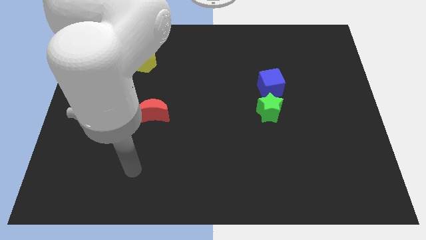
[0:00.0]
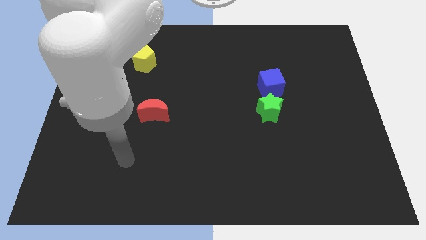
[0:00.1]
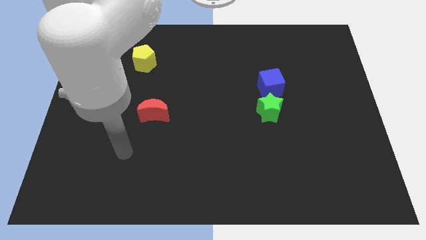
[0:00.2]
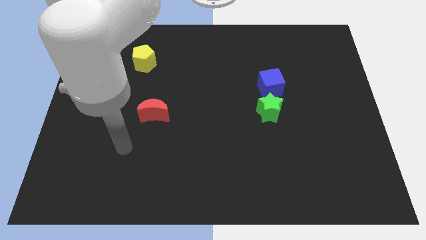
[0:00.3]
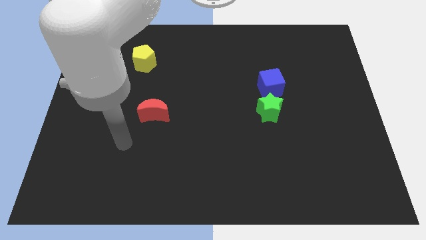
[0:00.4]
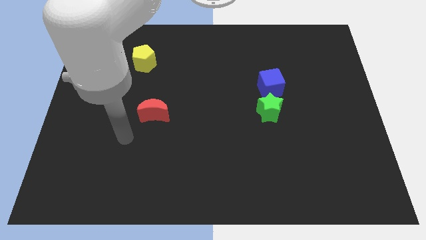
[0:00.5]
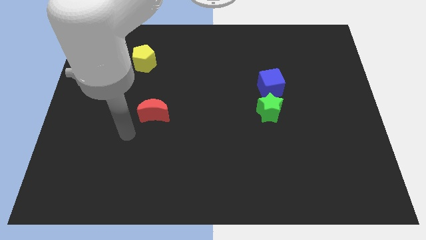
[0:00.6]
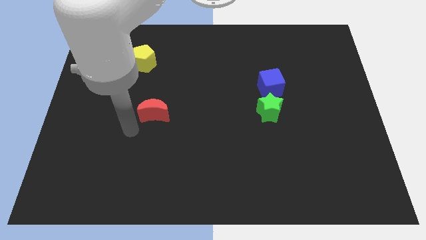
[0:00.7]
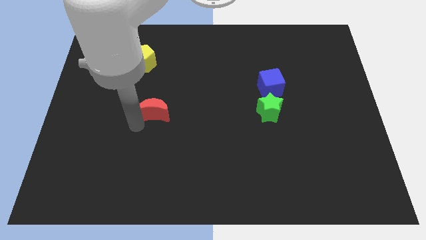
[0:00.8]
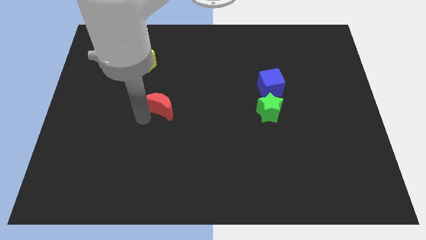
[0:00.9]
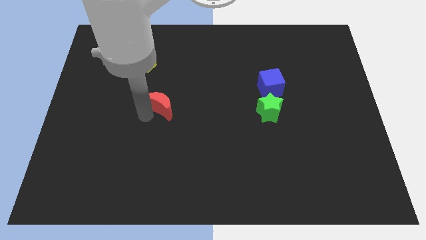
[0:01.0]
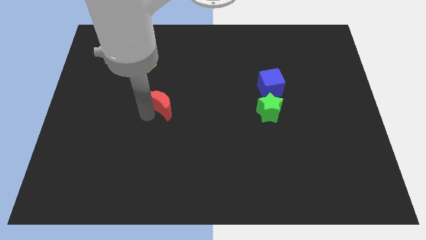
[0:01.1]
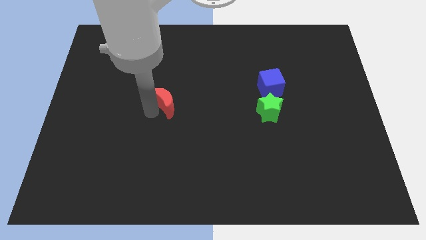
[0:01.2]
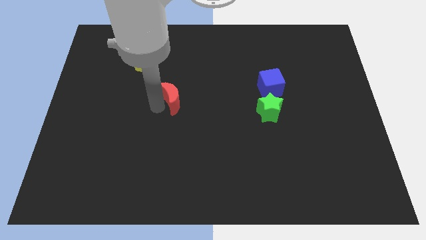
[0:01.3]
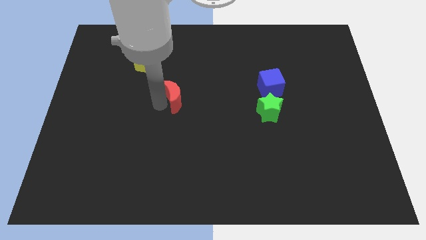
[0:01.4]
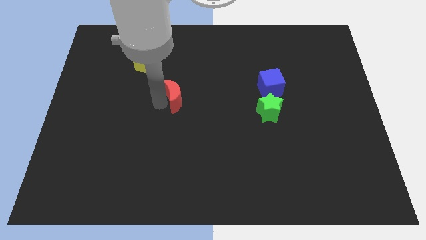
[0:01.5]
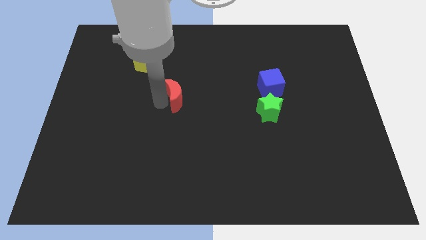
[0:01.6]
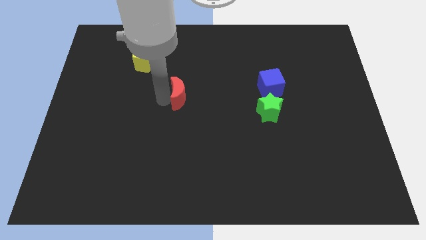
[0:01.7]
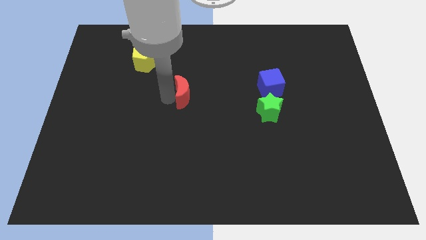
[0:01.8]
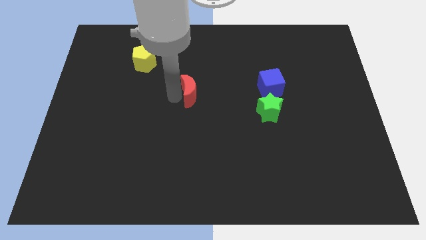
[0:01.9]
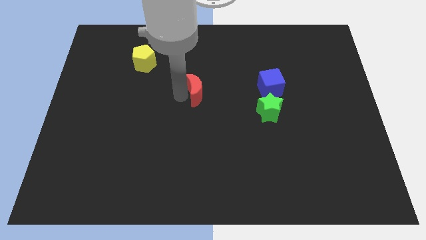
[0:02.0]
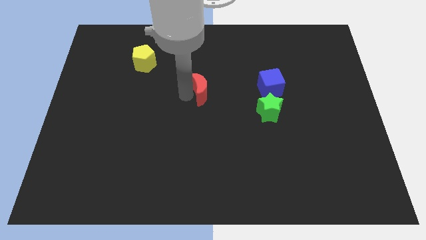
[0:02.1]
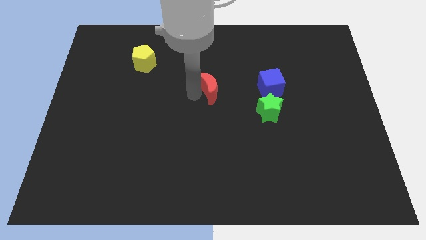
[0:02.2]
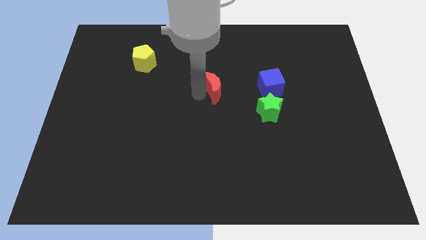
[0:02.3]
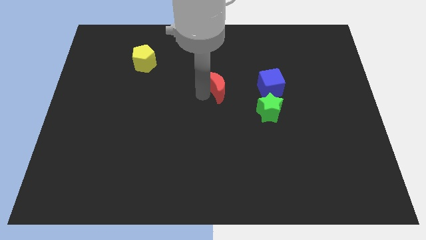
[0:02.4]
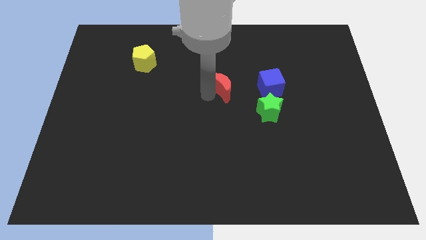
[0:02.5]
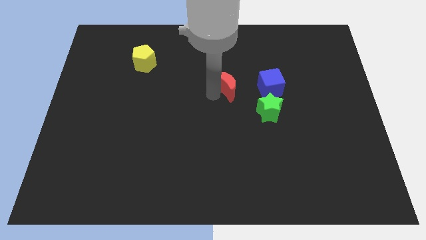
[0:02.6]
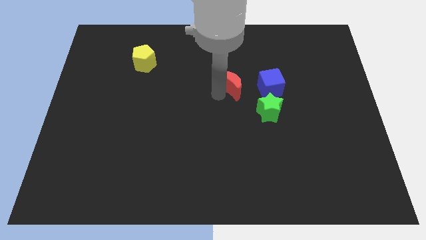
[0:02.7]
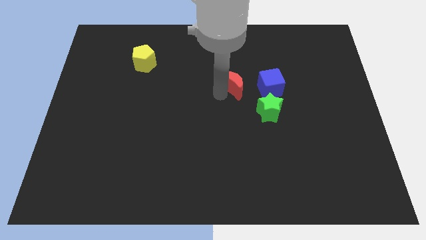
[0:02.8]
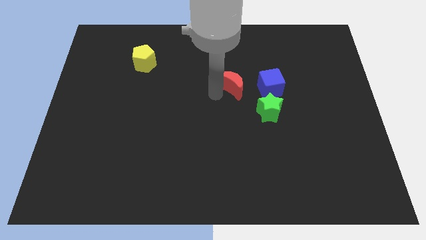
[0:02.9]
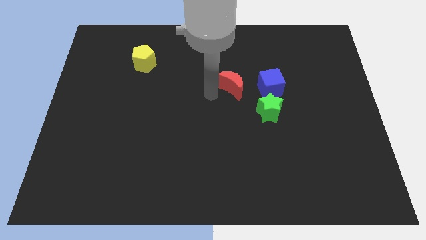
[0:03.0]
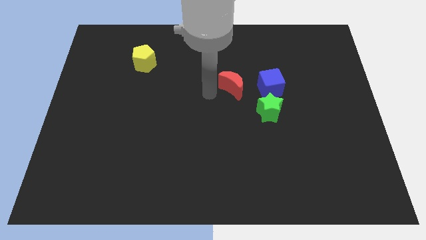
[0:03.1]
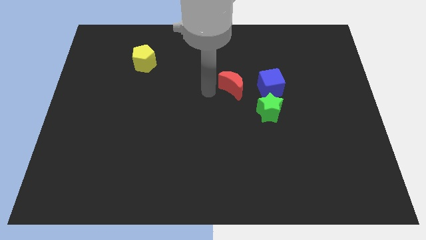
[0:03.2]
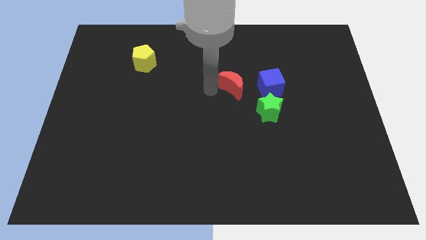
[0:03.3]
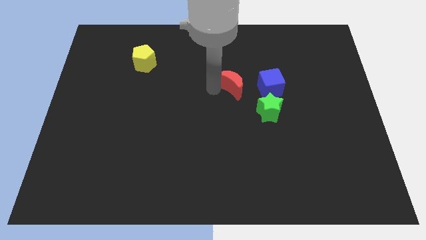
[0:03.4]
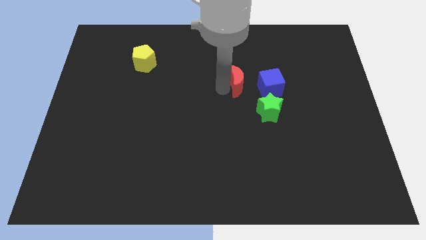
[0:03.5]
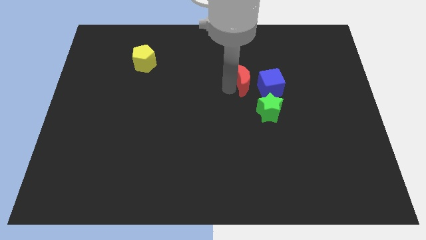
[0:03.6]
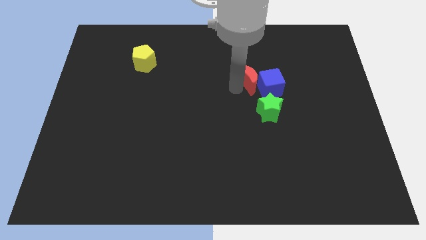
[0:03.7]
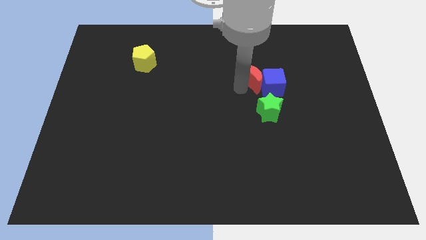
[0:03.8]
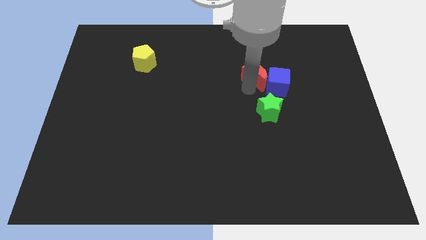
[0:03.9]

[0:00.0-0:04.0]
slide the red moon to the blue block

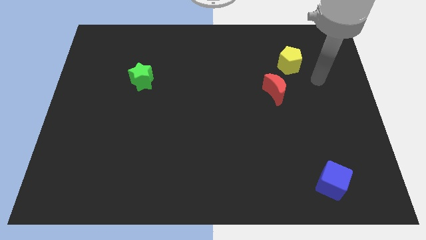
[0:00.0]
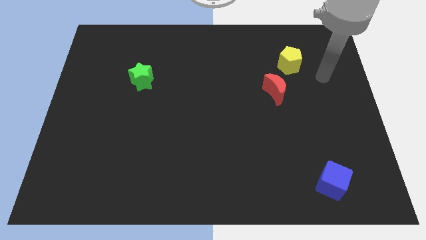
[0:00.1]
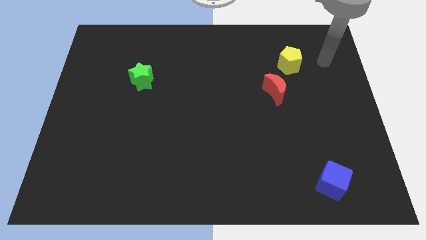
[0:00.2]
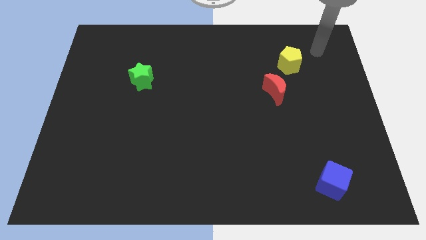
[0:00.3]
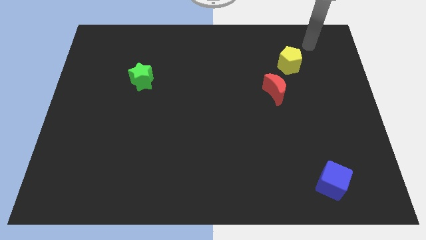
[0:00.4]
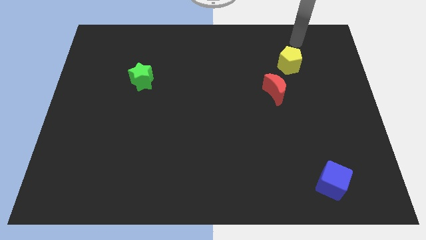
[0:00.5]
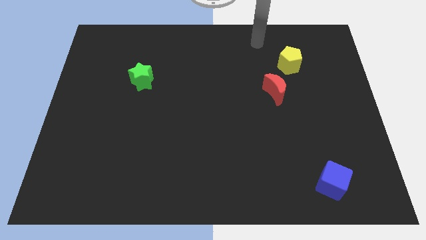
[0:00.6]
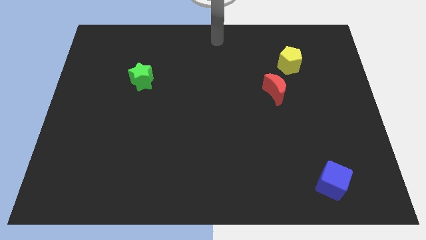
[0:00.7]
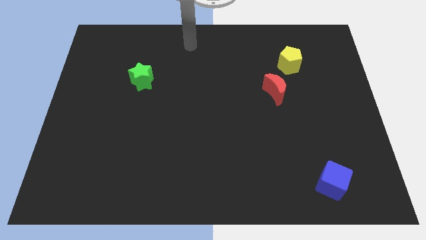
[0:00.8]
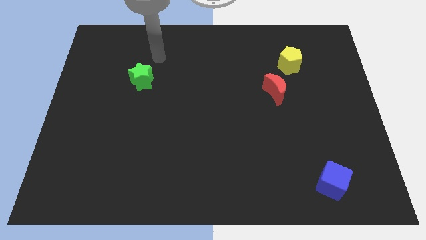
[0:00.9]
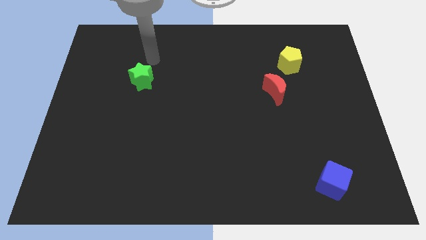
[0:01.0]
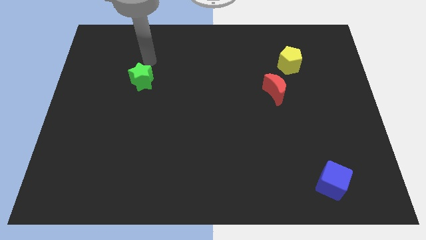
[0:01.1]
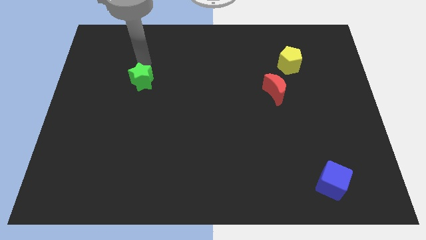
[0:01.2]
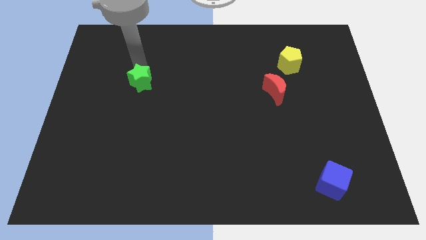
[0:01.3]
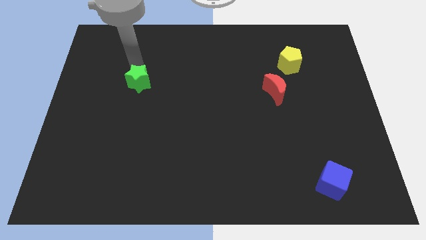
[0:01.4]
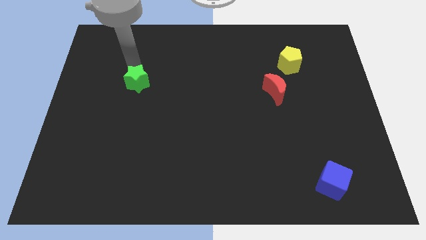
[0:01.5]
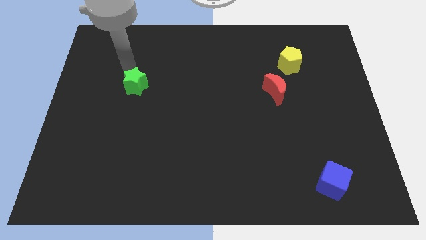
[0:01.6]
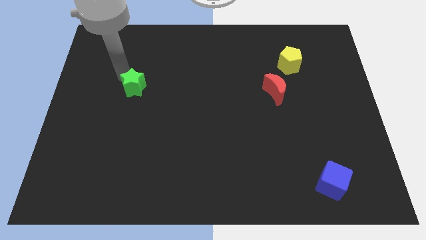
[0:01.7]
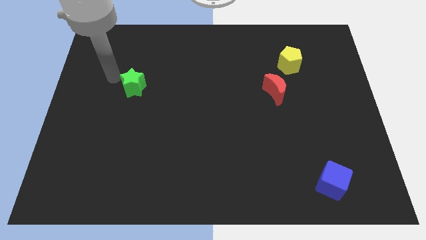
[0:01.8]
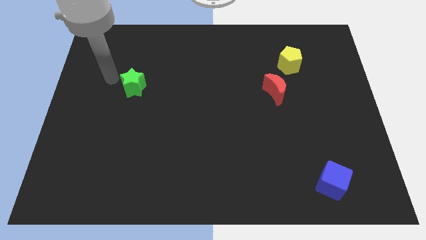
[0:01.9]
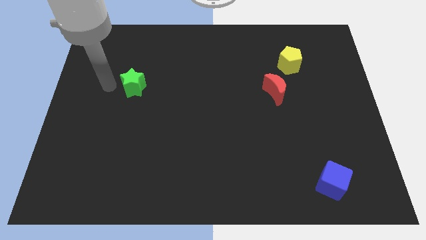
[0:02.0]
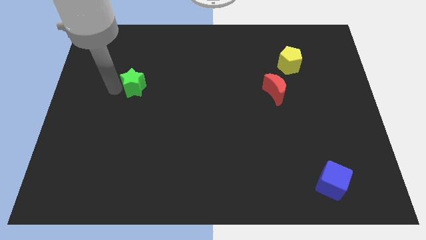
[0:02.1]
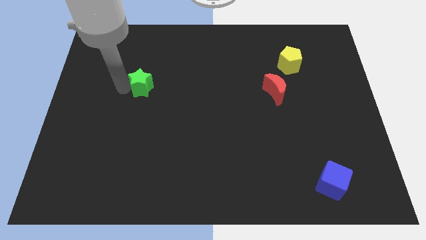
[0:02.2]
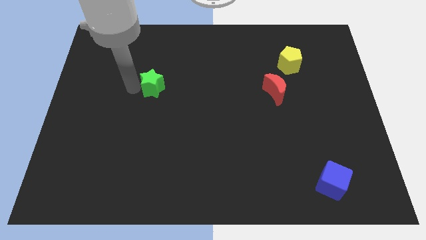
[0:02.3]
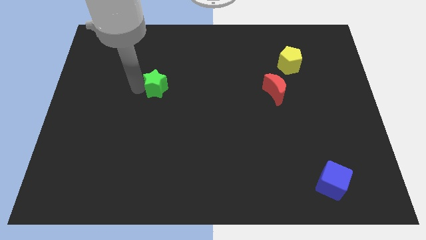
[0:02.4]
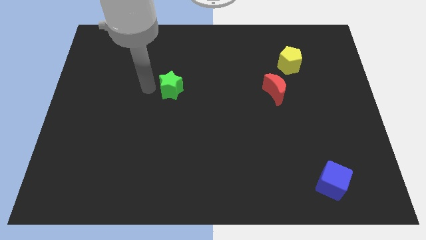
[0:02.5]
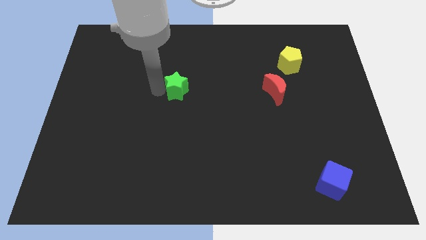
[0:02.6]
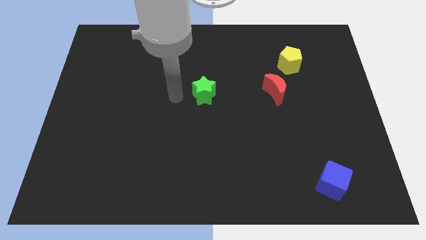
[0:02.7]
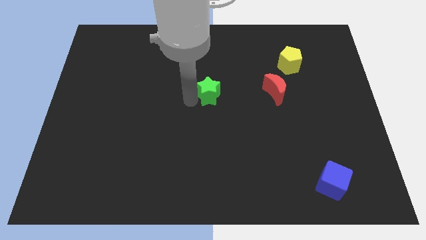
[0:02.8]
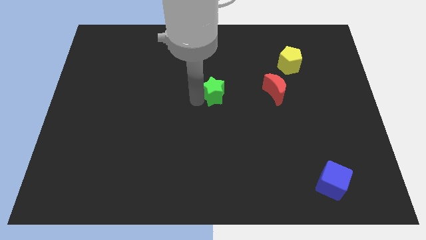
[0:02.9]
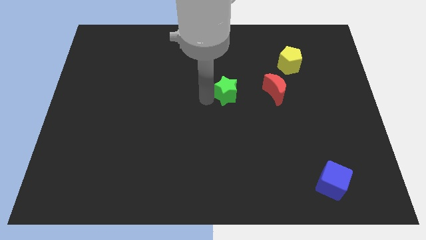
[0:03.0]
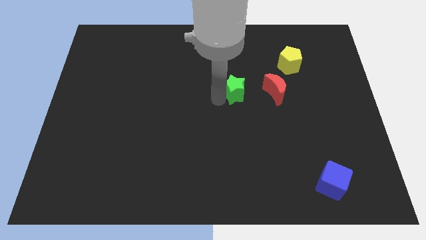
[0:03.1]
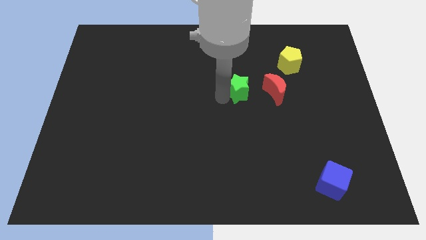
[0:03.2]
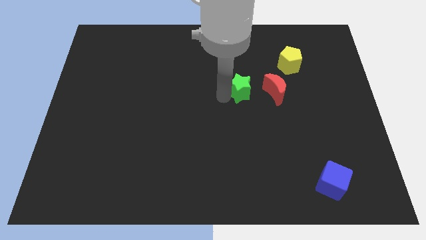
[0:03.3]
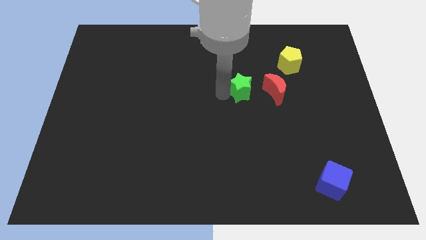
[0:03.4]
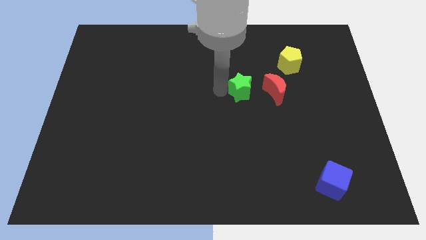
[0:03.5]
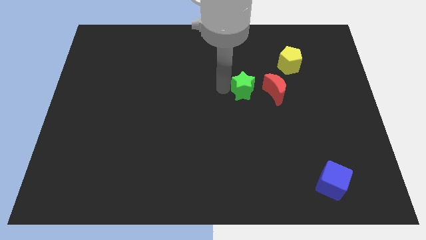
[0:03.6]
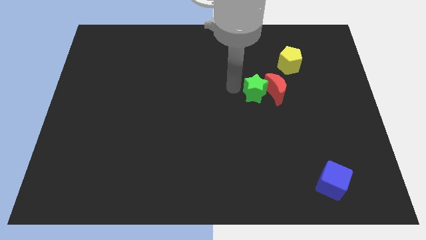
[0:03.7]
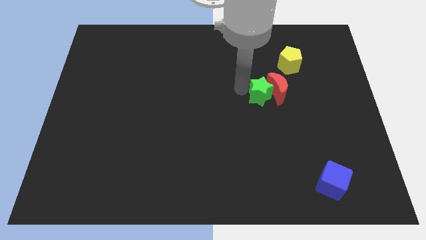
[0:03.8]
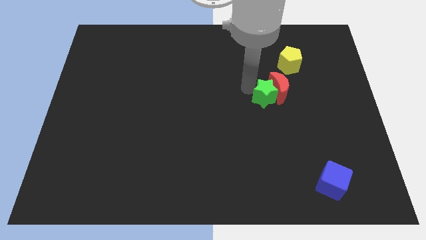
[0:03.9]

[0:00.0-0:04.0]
slide the green star to the red moon

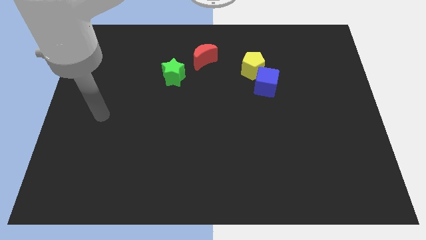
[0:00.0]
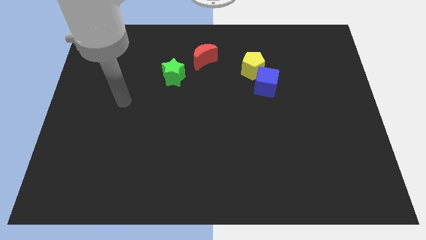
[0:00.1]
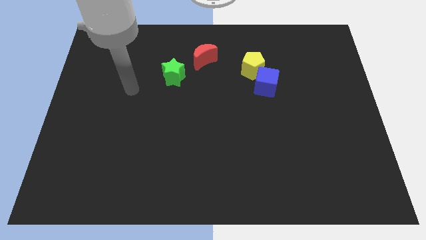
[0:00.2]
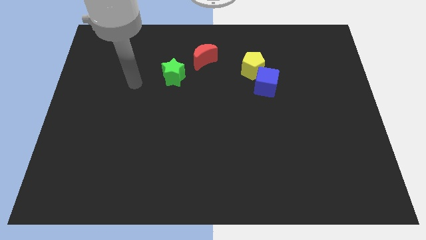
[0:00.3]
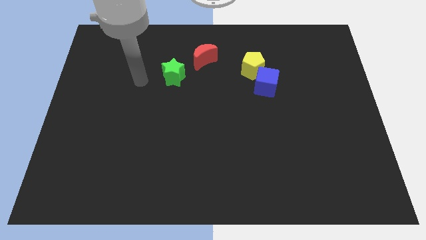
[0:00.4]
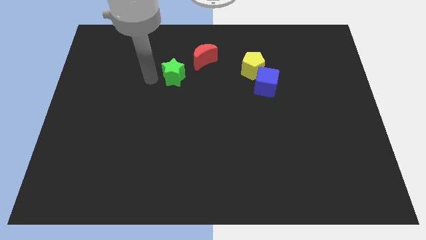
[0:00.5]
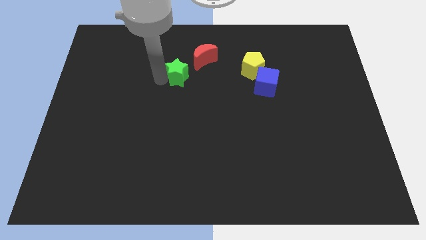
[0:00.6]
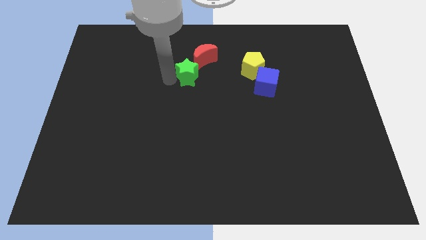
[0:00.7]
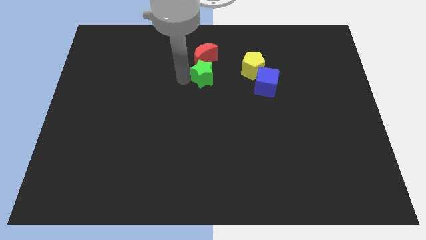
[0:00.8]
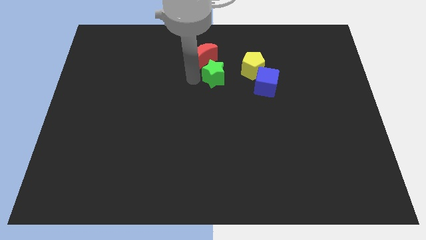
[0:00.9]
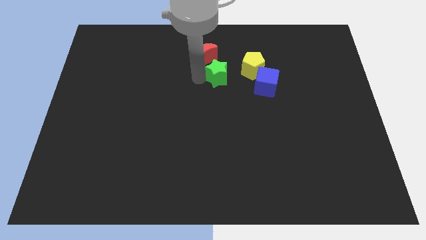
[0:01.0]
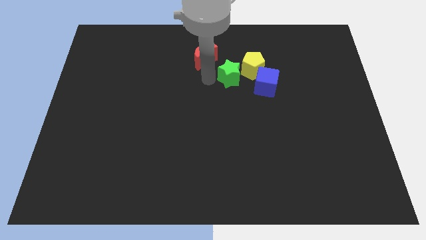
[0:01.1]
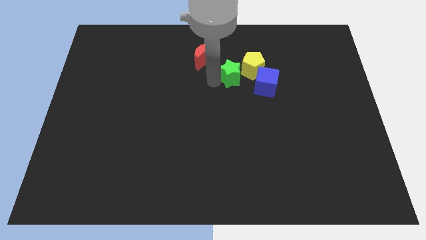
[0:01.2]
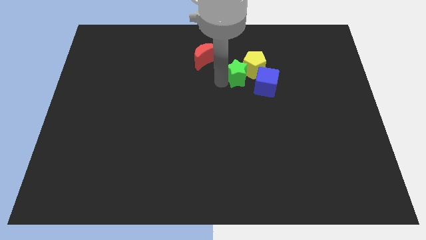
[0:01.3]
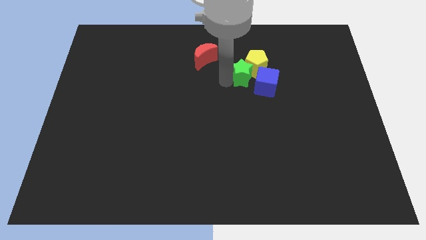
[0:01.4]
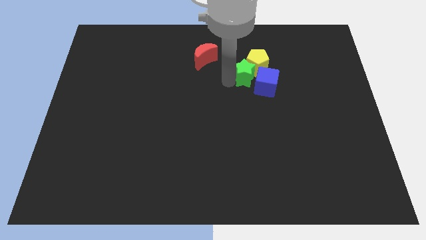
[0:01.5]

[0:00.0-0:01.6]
put the green star close to the yellow block
